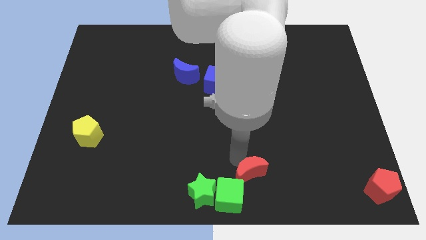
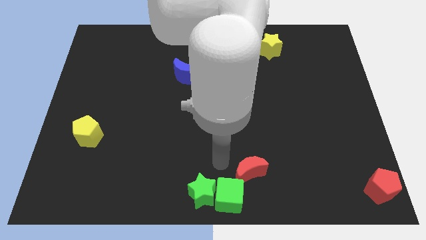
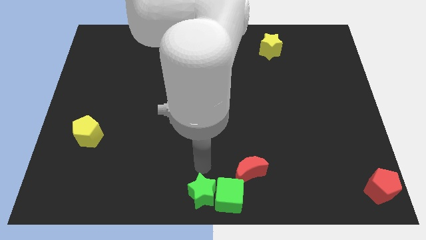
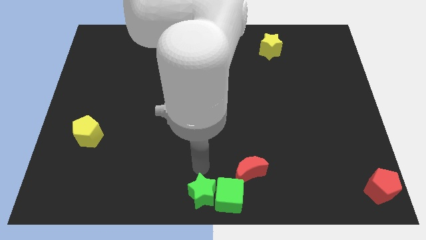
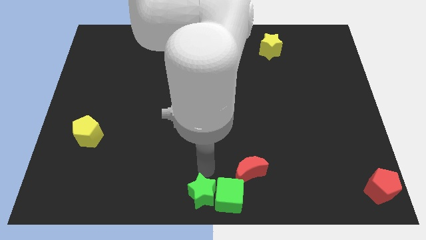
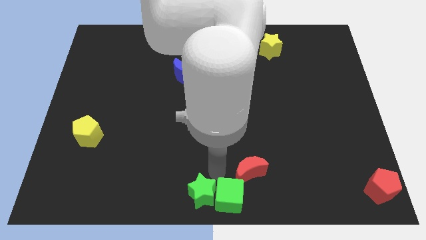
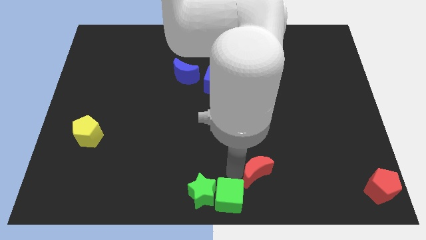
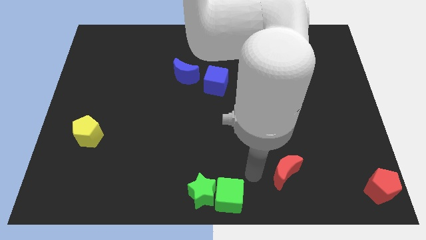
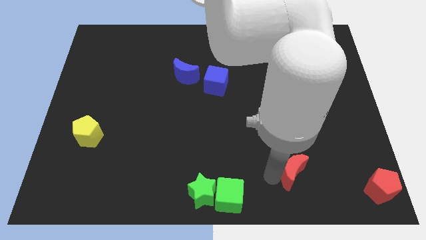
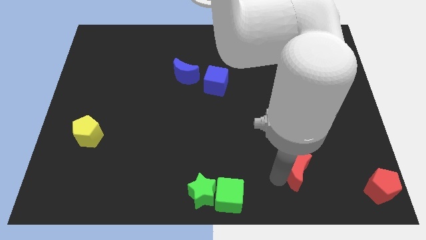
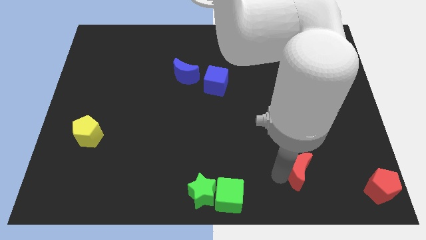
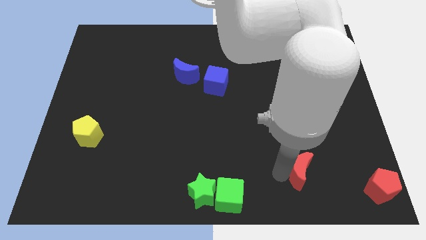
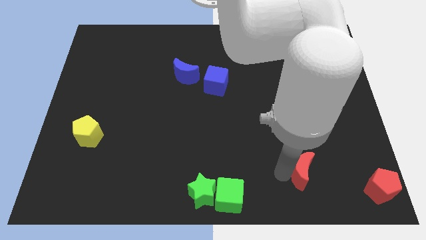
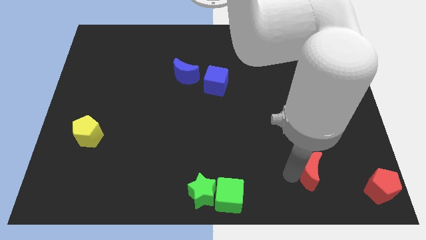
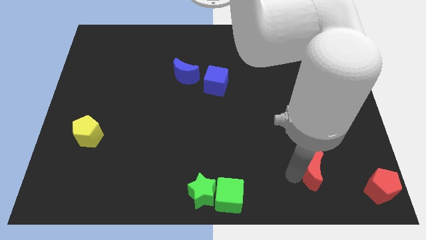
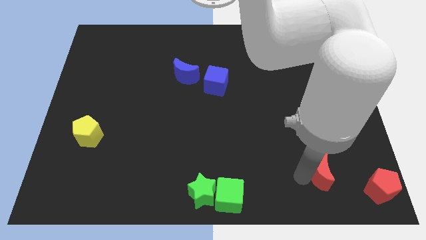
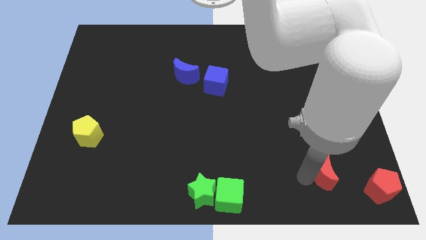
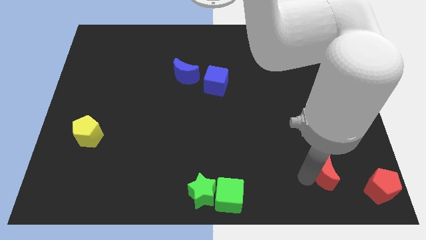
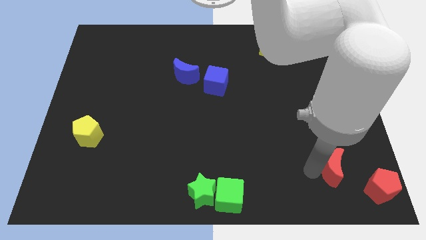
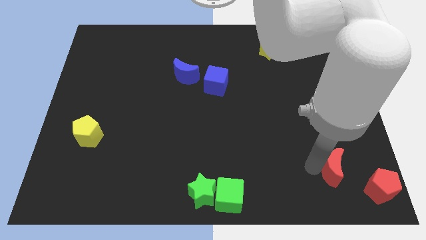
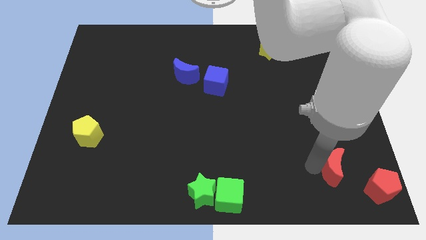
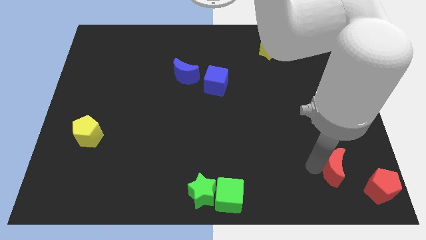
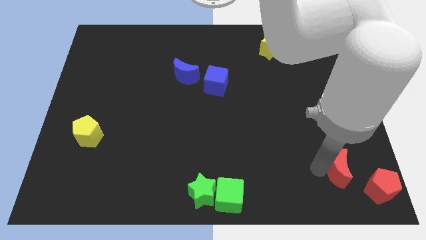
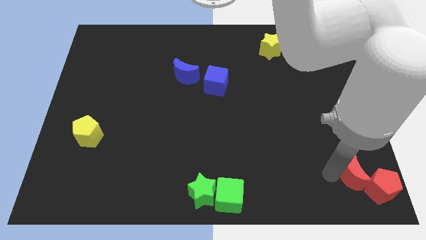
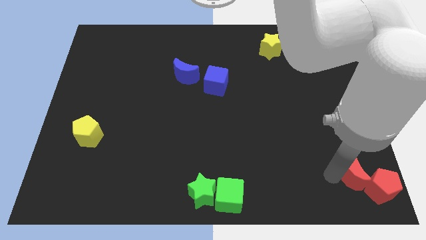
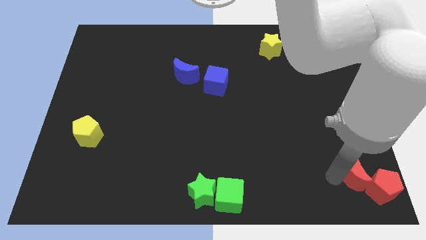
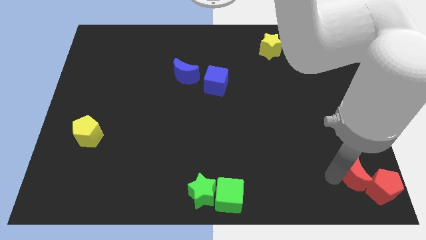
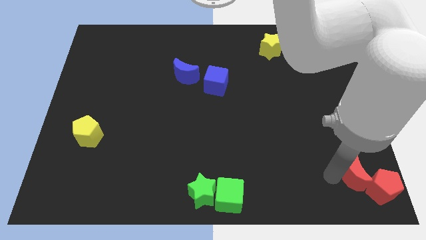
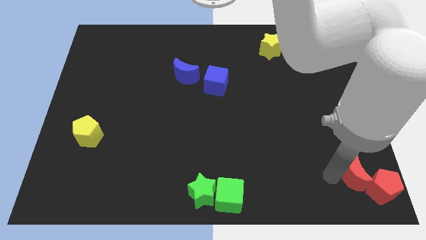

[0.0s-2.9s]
place red crescent near to red pentagon

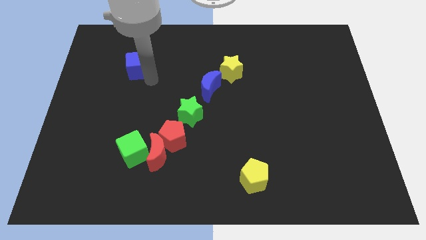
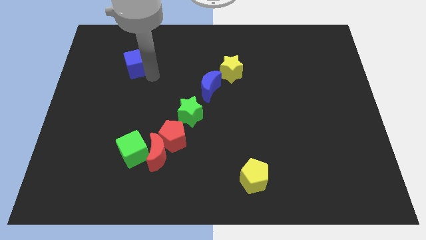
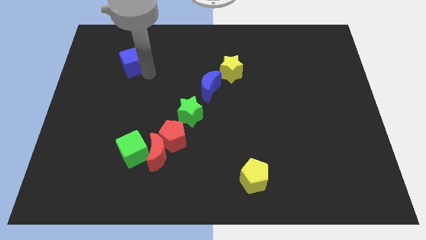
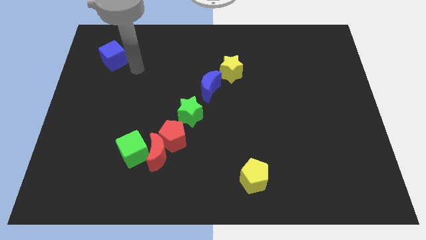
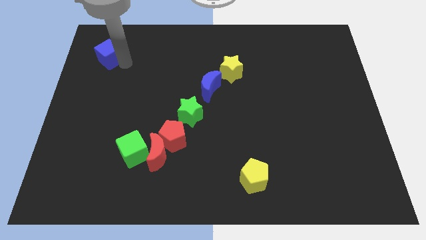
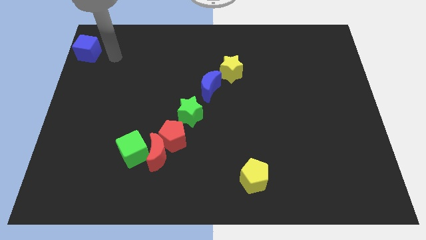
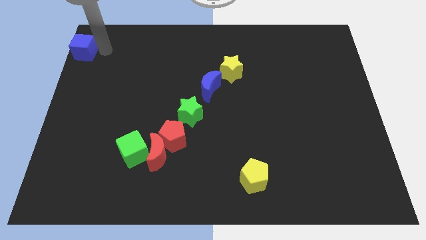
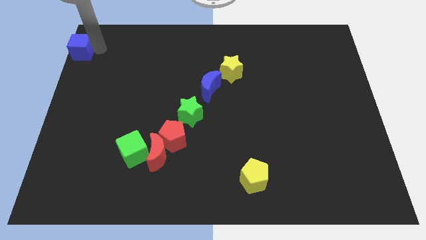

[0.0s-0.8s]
push blue cube to the left side of the board

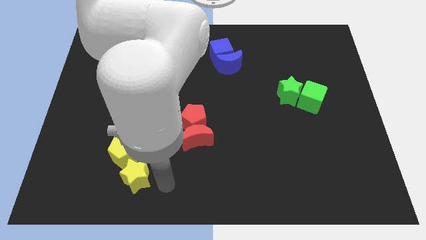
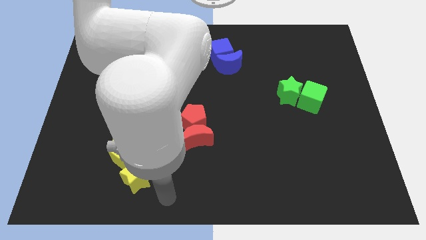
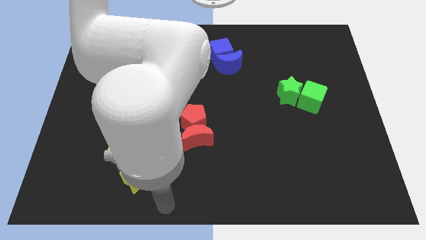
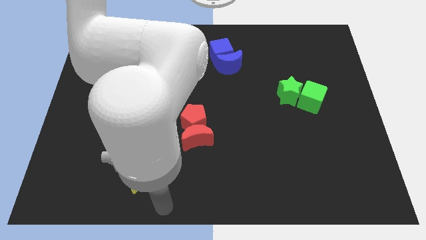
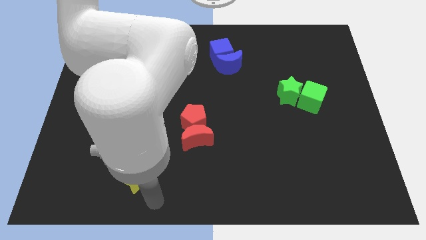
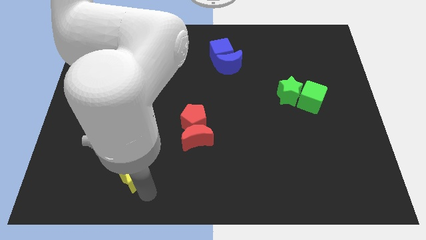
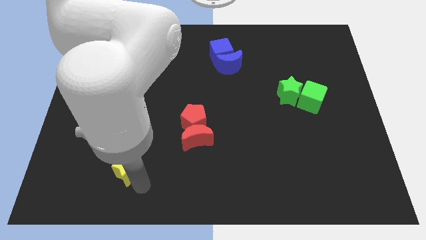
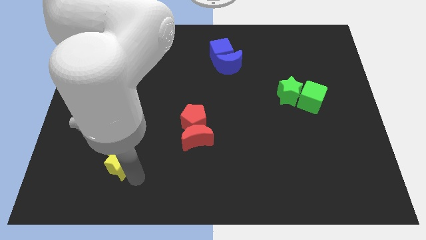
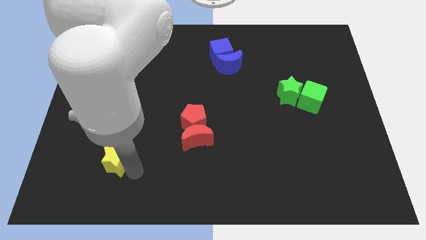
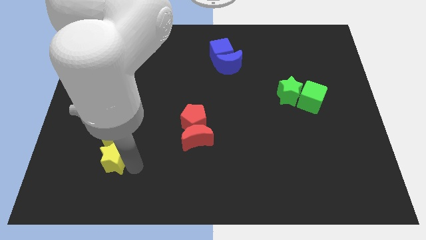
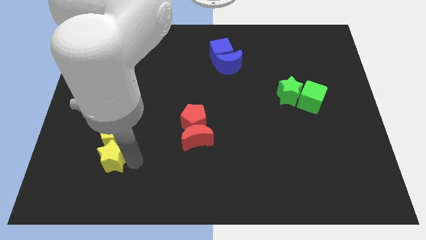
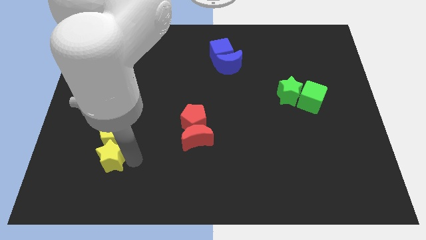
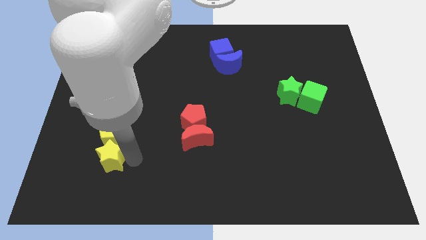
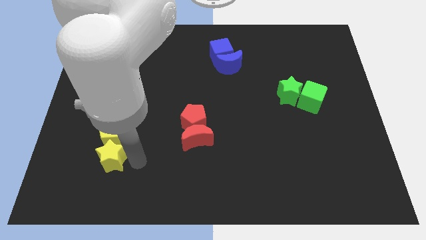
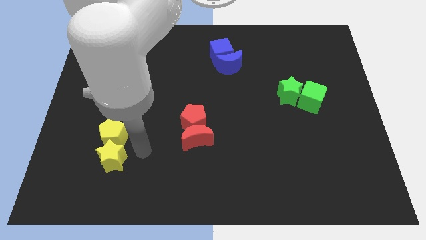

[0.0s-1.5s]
move the yellow star into the yellow pentagon

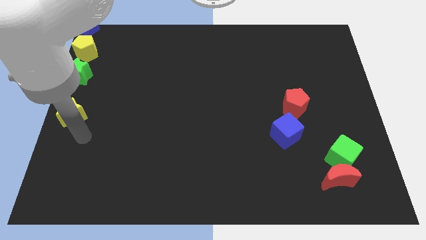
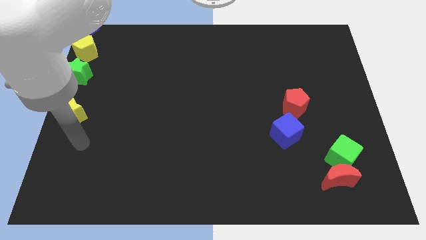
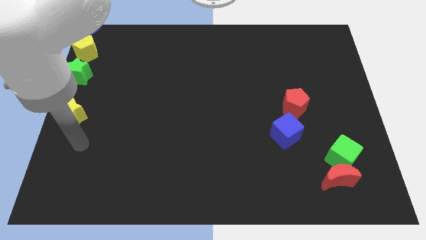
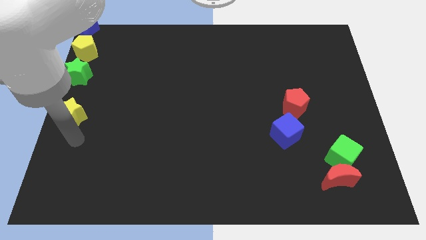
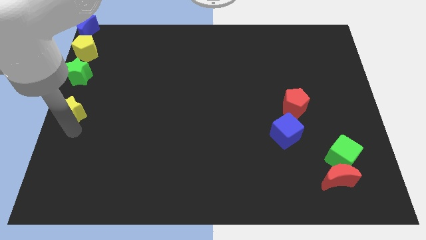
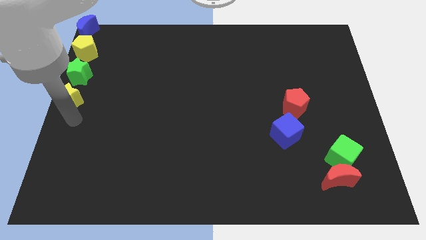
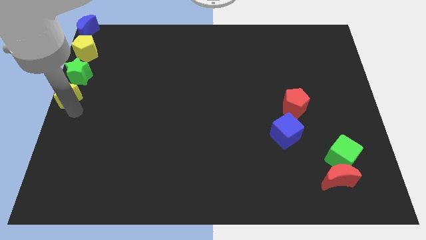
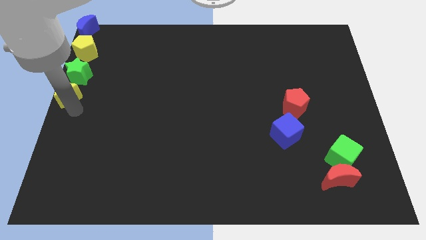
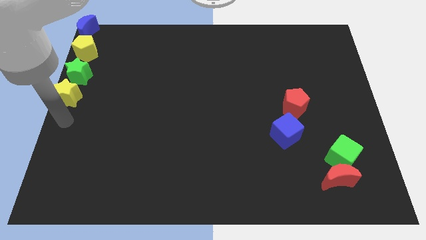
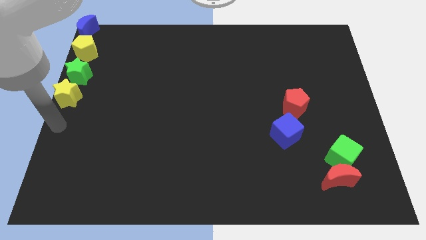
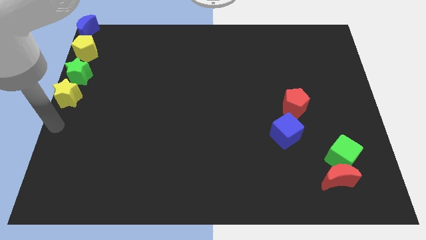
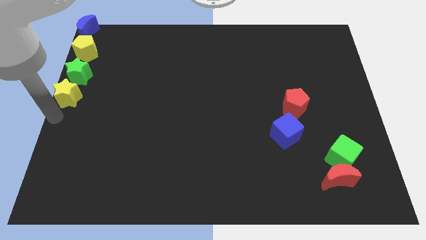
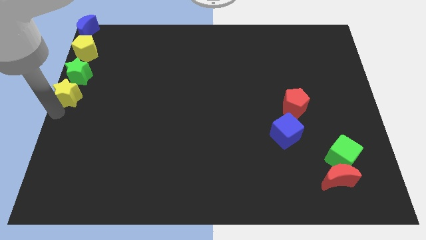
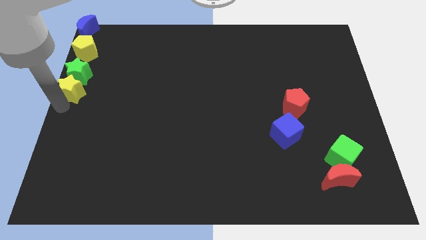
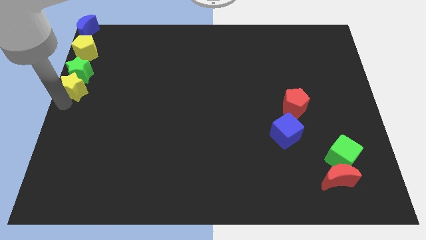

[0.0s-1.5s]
place the yellow star below the green star to form a vertical line

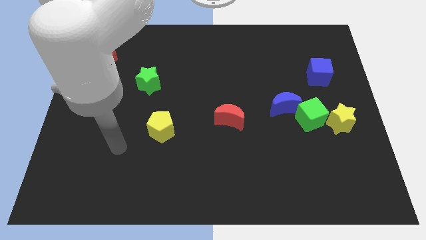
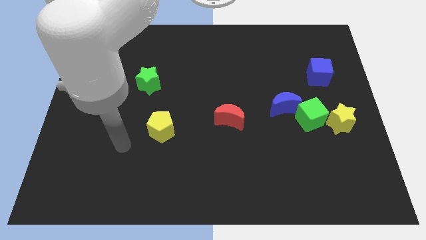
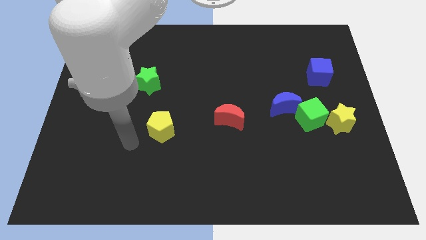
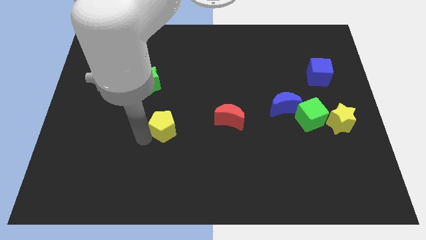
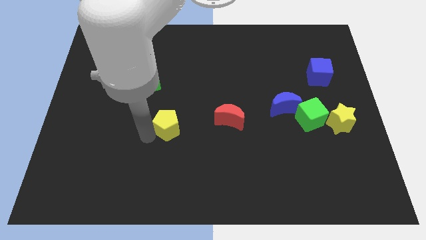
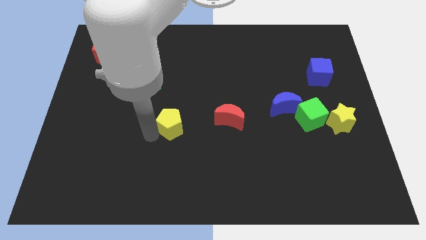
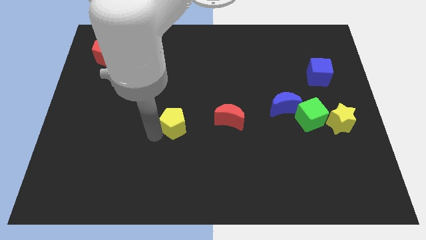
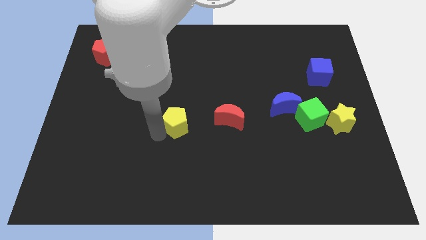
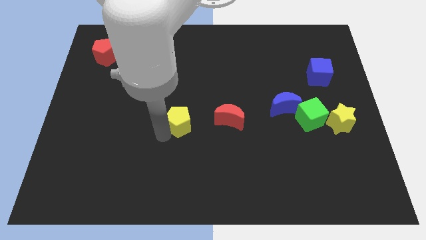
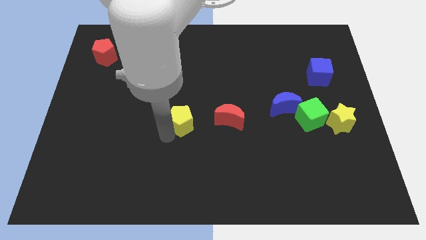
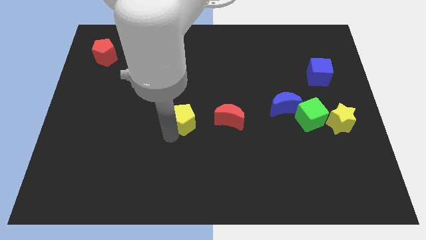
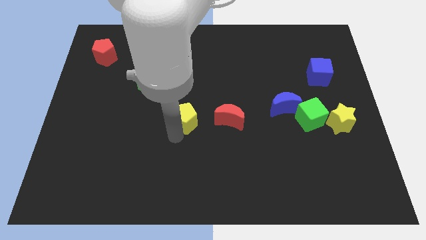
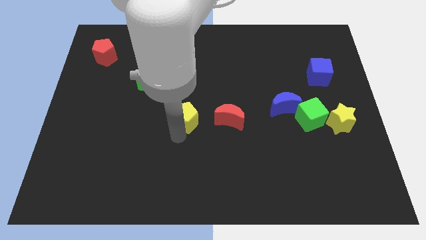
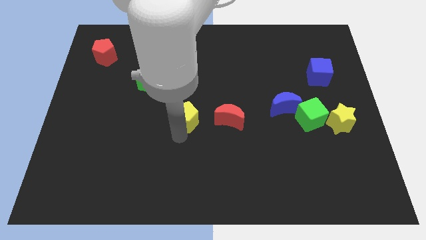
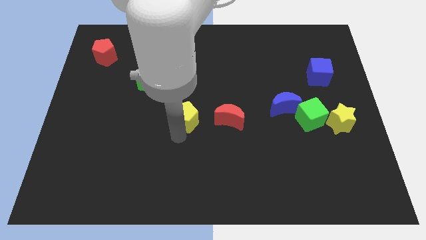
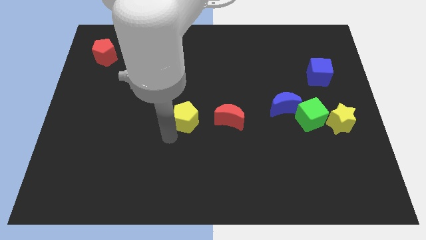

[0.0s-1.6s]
put the yellow pentagon to the left of the red crescent

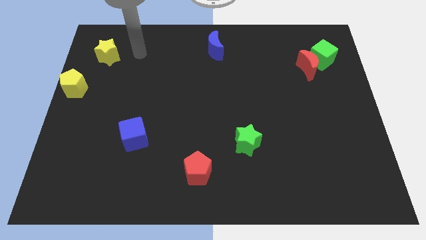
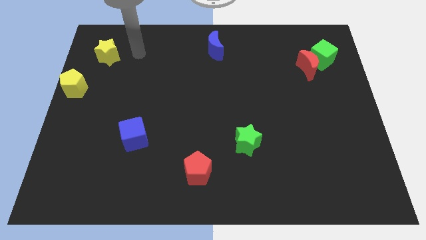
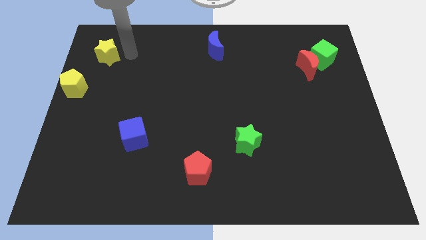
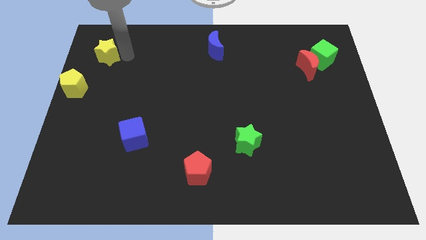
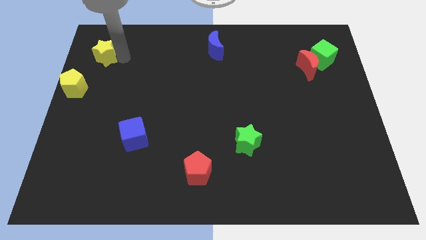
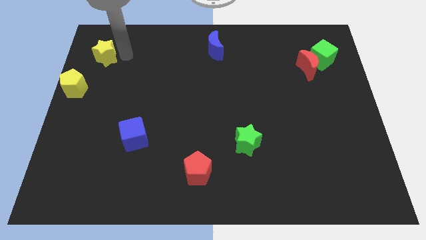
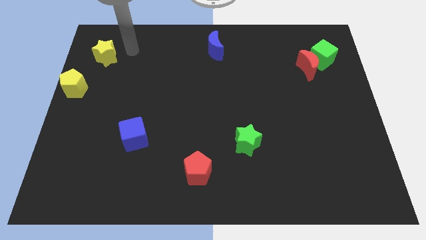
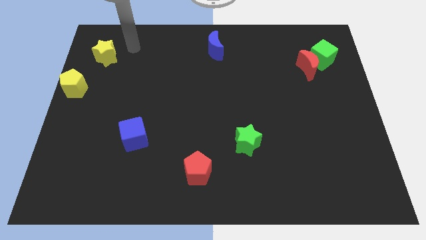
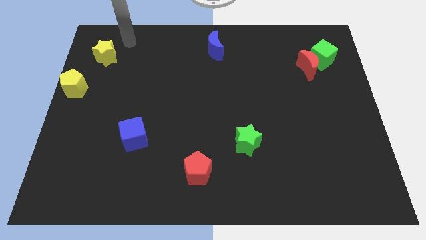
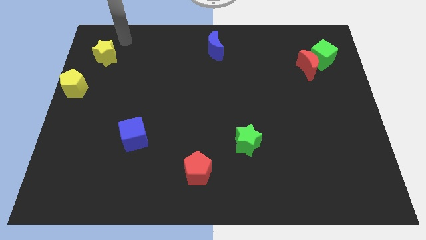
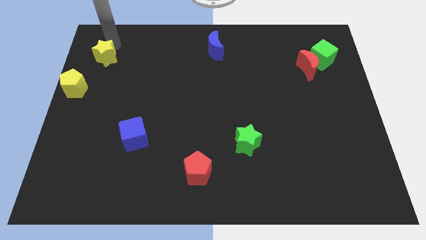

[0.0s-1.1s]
move your arm near the yellow star
